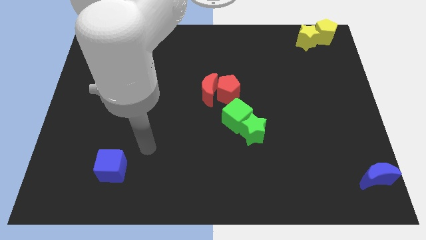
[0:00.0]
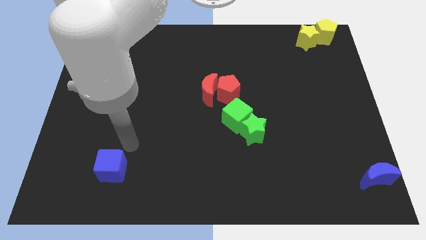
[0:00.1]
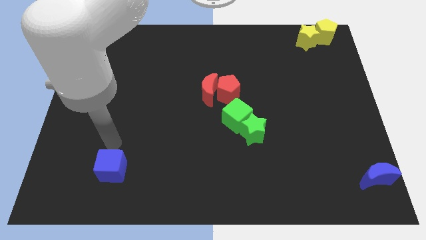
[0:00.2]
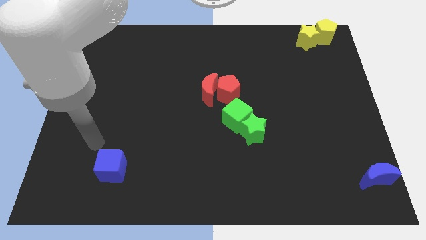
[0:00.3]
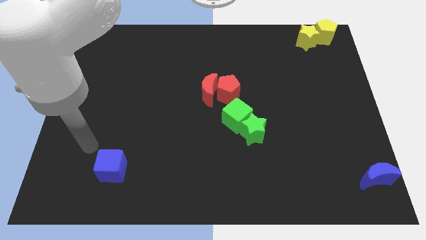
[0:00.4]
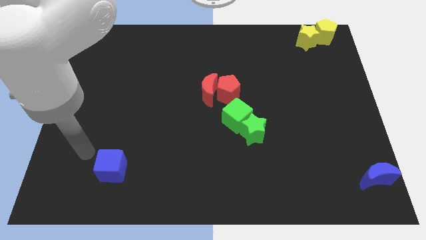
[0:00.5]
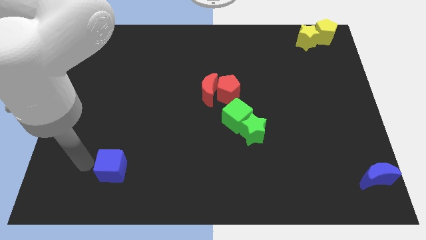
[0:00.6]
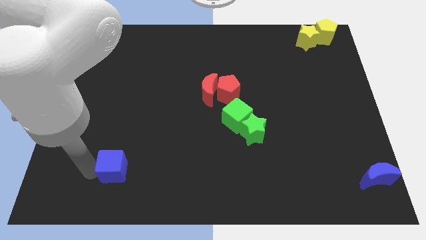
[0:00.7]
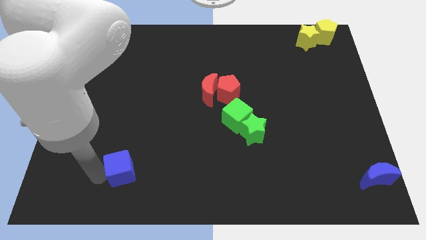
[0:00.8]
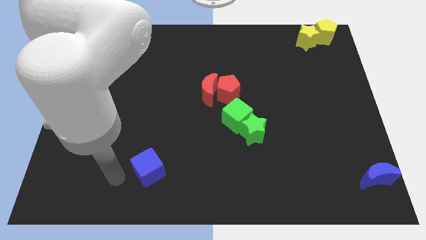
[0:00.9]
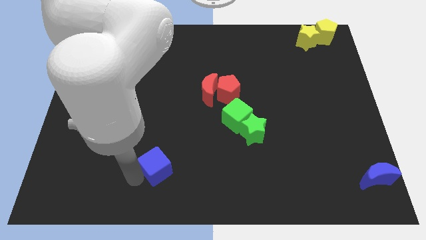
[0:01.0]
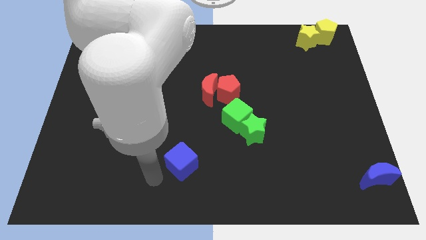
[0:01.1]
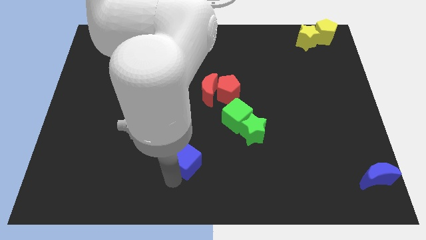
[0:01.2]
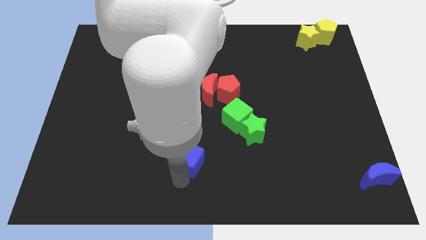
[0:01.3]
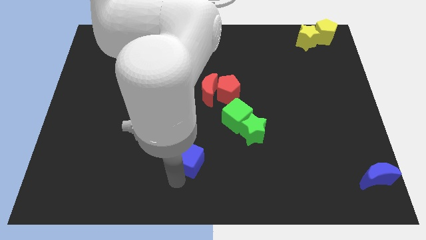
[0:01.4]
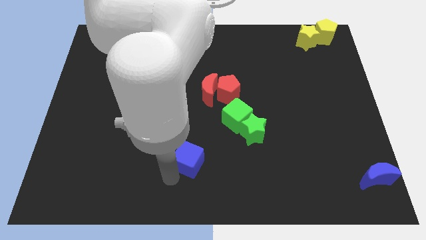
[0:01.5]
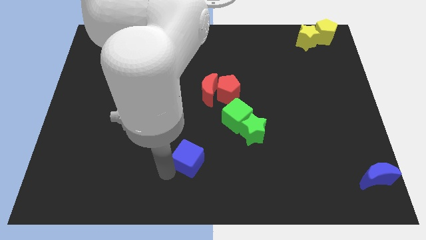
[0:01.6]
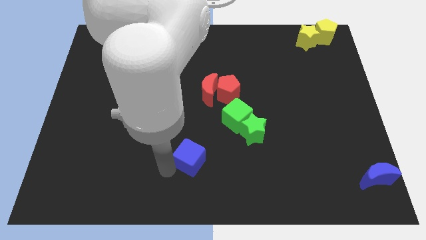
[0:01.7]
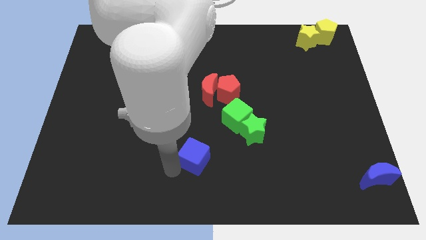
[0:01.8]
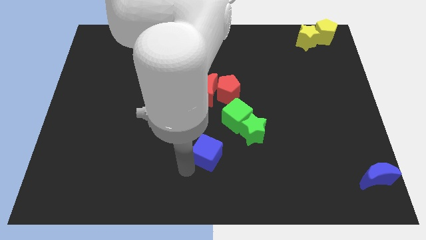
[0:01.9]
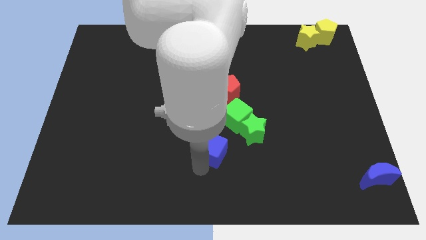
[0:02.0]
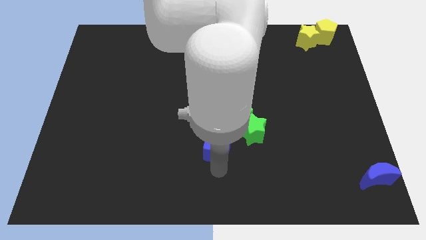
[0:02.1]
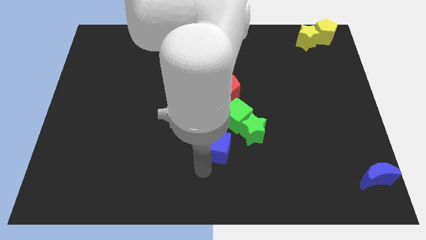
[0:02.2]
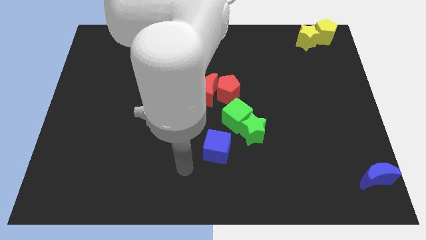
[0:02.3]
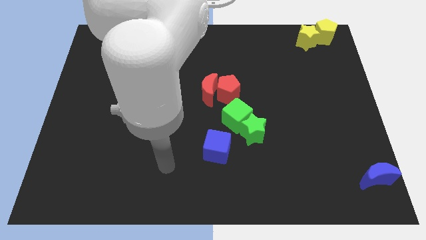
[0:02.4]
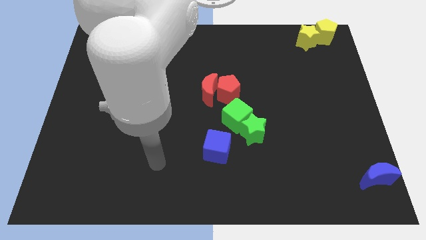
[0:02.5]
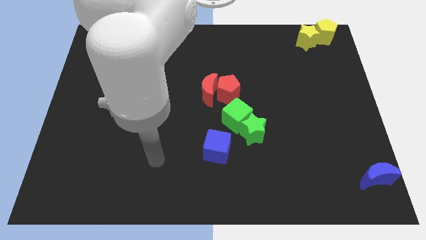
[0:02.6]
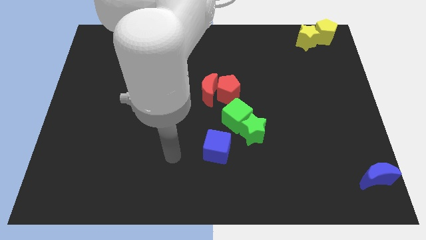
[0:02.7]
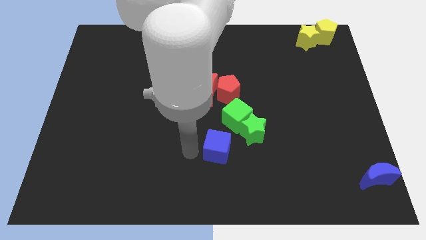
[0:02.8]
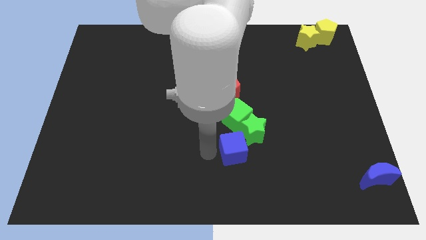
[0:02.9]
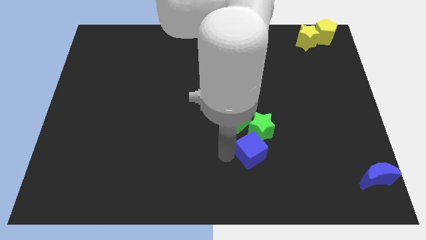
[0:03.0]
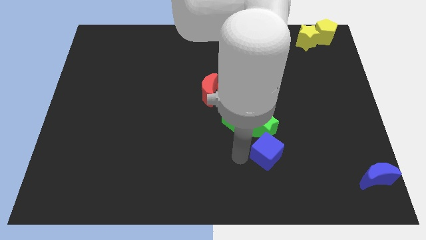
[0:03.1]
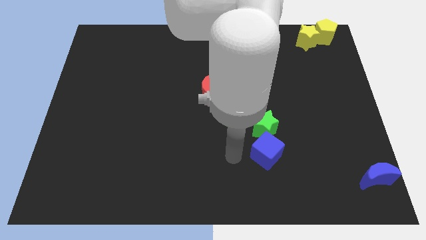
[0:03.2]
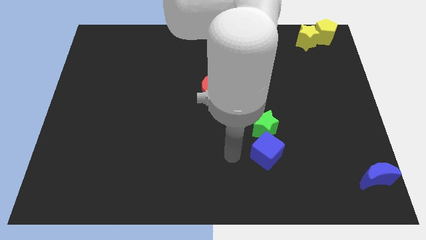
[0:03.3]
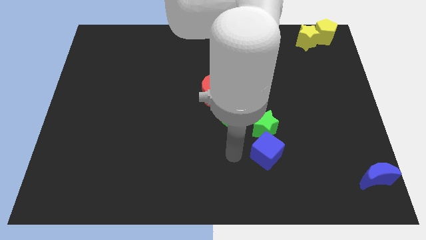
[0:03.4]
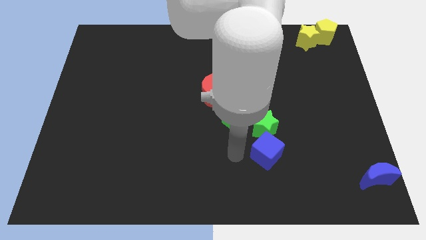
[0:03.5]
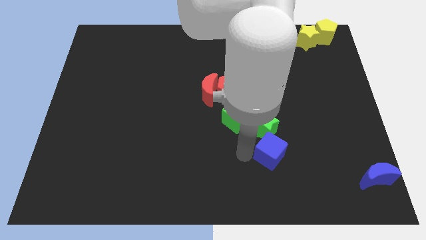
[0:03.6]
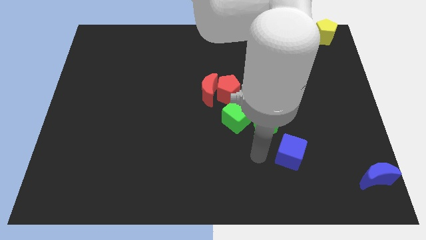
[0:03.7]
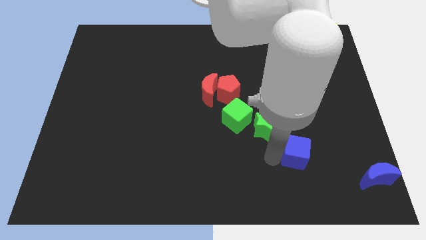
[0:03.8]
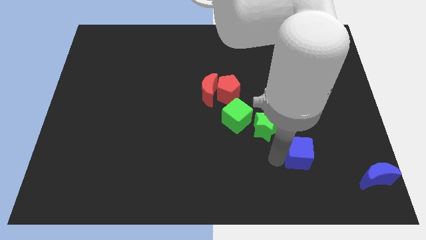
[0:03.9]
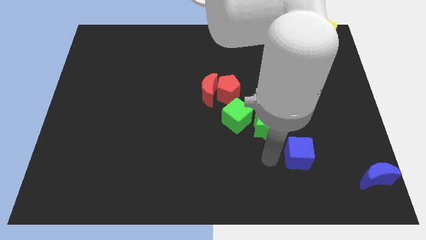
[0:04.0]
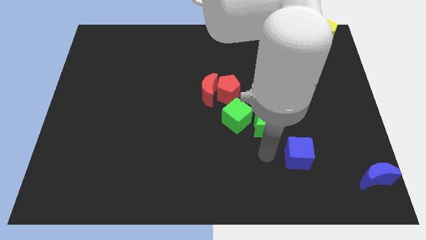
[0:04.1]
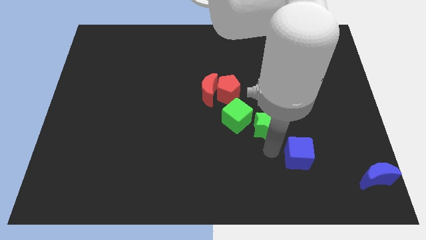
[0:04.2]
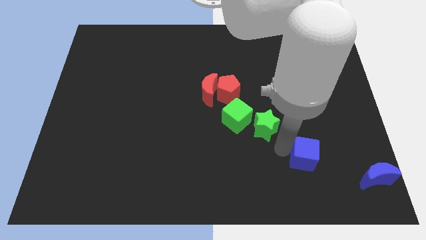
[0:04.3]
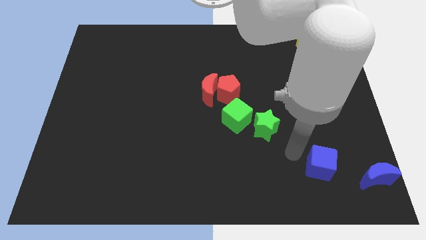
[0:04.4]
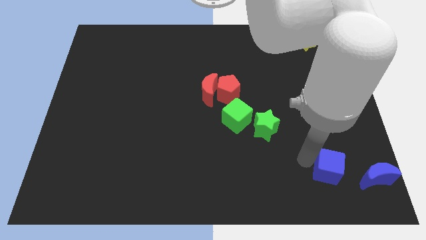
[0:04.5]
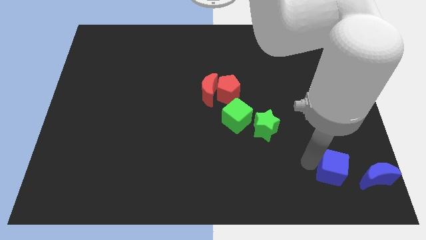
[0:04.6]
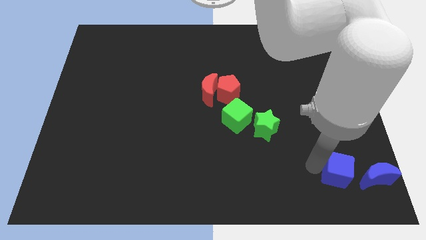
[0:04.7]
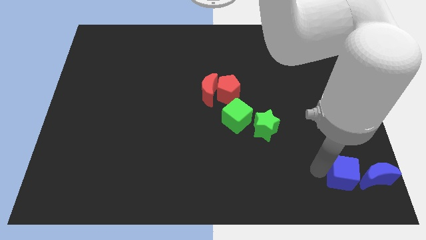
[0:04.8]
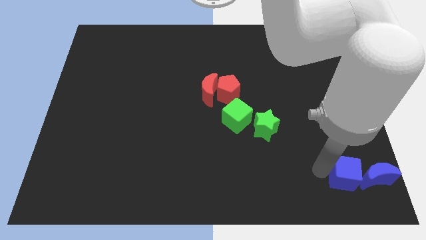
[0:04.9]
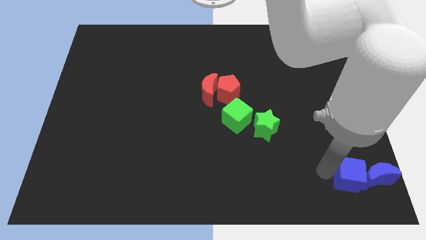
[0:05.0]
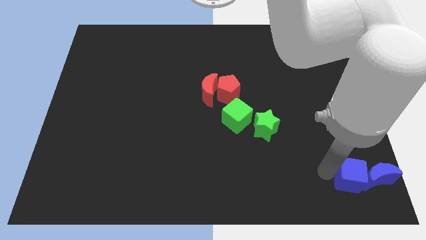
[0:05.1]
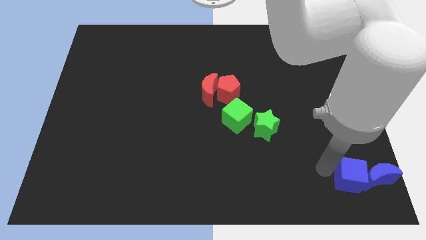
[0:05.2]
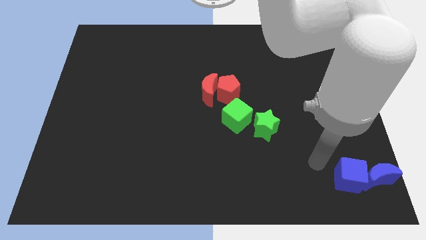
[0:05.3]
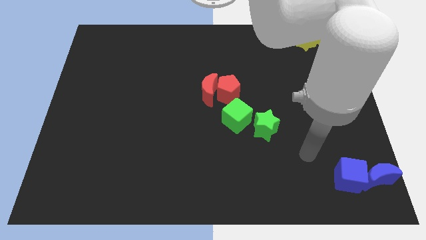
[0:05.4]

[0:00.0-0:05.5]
push the blue cube into the blue crescent

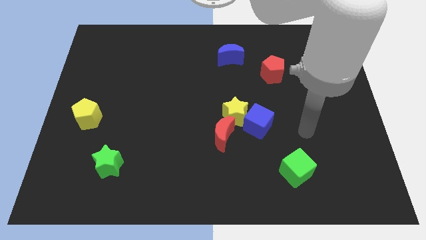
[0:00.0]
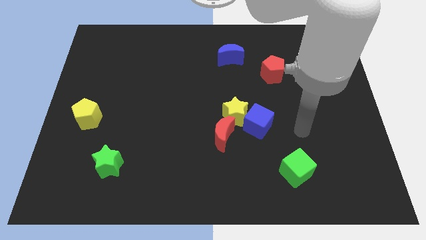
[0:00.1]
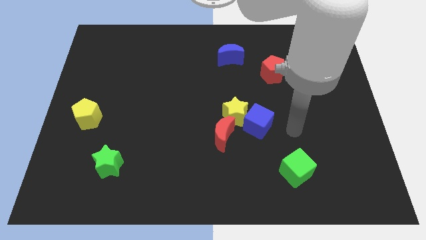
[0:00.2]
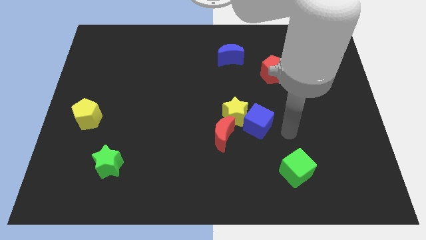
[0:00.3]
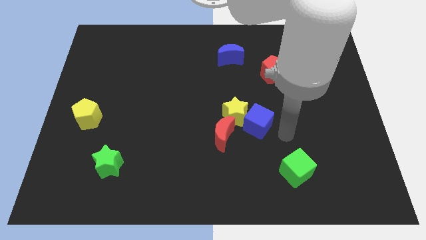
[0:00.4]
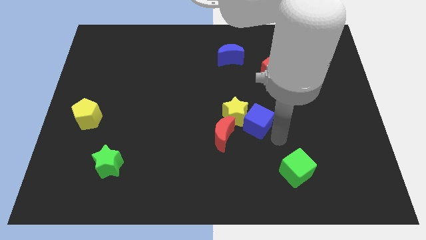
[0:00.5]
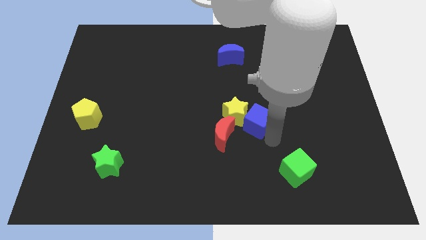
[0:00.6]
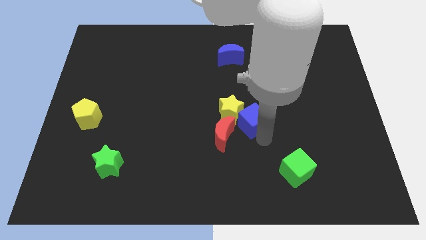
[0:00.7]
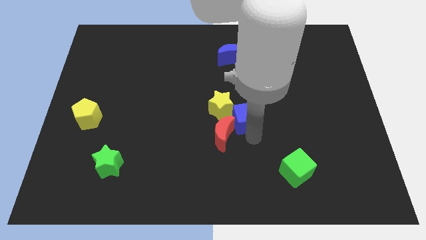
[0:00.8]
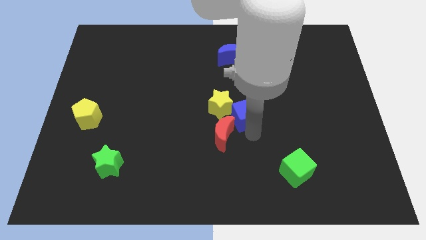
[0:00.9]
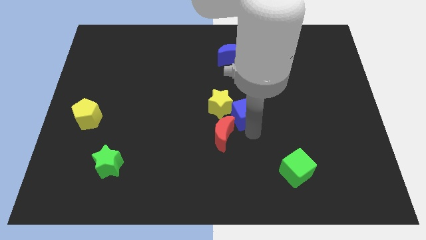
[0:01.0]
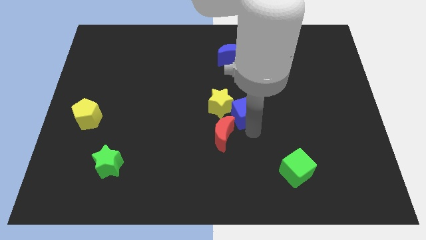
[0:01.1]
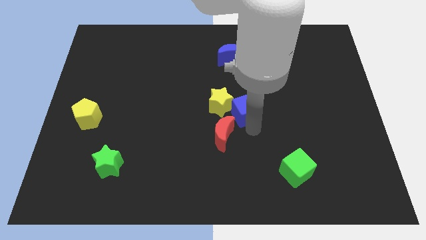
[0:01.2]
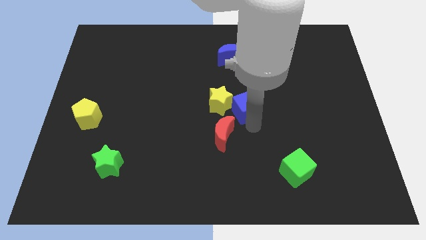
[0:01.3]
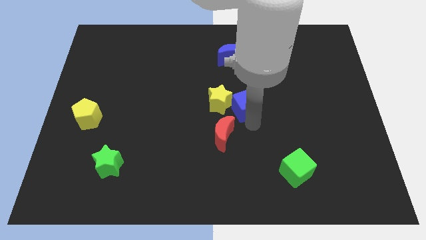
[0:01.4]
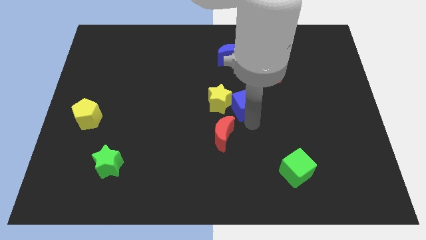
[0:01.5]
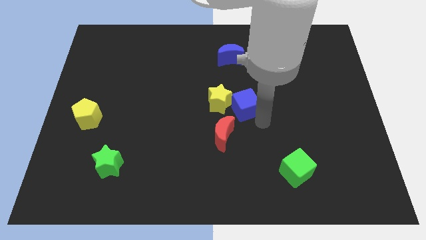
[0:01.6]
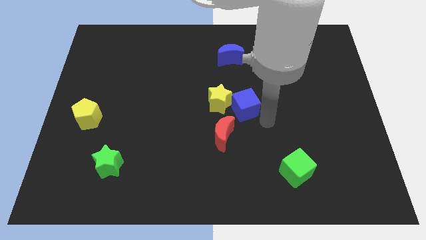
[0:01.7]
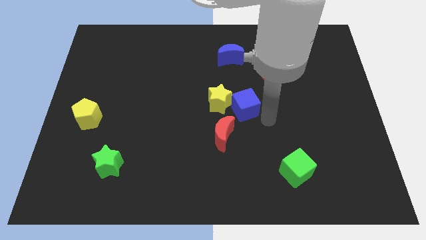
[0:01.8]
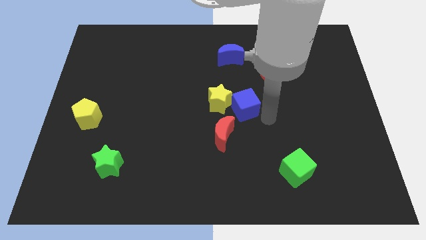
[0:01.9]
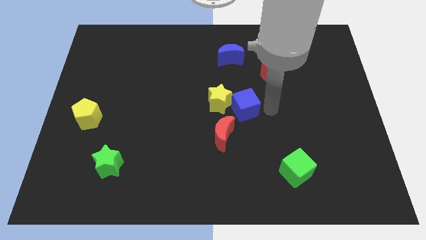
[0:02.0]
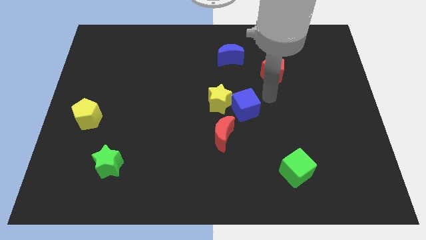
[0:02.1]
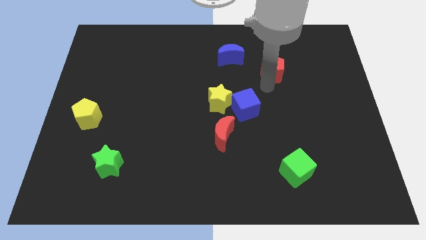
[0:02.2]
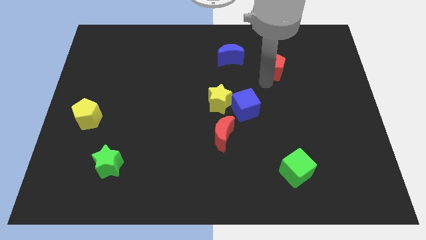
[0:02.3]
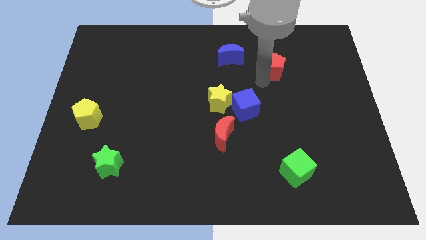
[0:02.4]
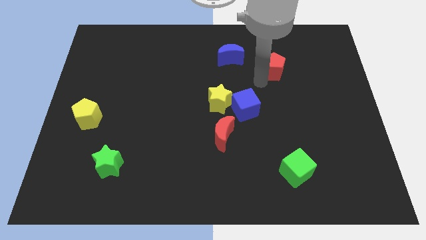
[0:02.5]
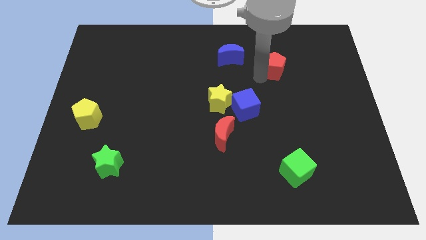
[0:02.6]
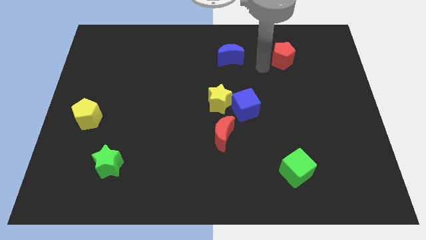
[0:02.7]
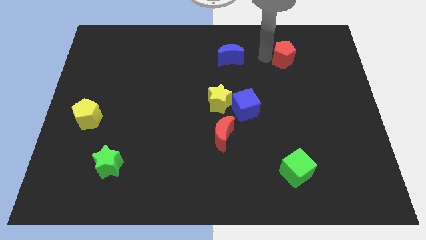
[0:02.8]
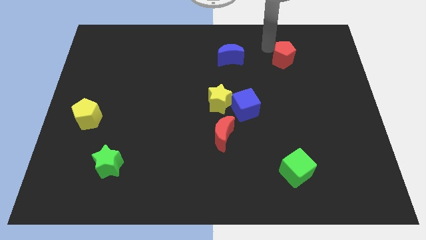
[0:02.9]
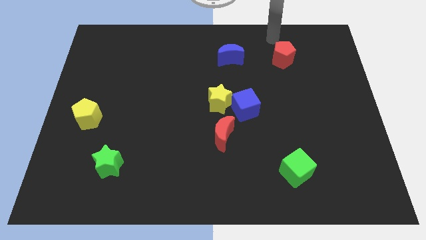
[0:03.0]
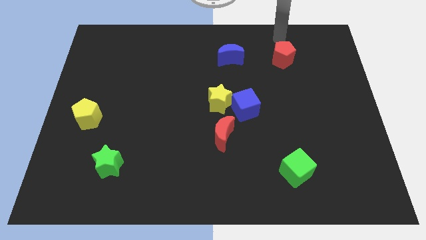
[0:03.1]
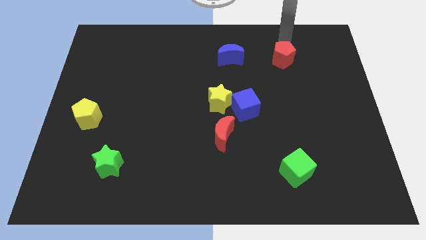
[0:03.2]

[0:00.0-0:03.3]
adjust the blue cube and red pentagon diagonally to the red crescent

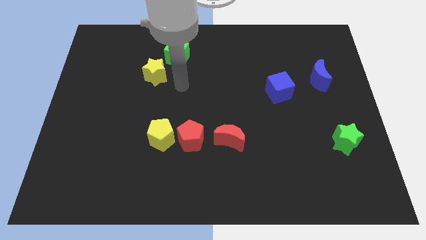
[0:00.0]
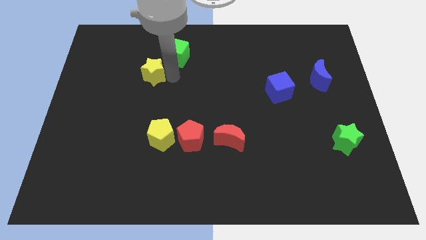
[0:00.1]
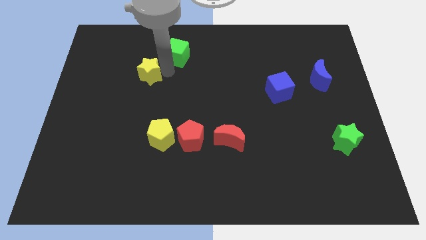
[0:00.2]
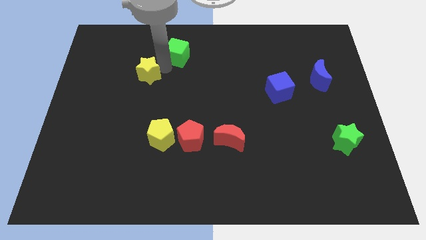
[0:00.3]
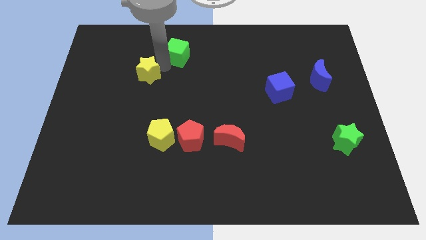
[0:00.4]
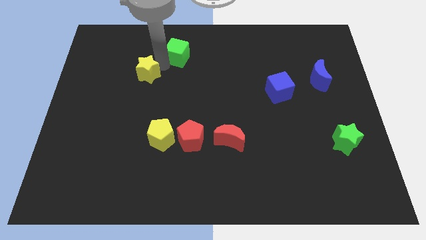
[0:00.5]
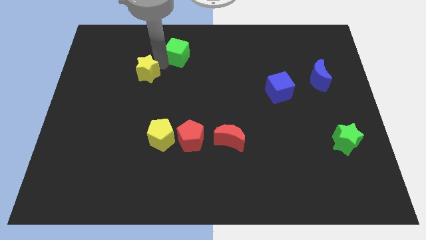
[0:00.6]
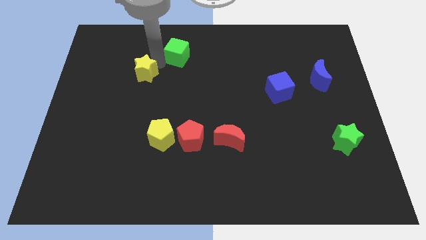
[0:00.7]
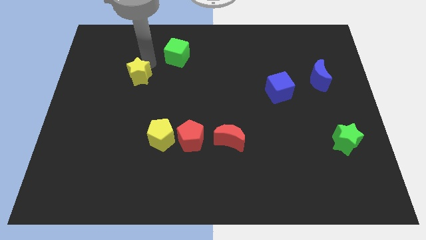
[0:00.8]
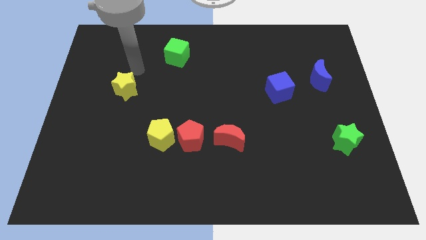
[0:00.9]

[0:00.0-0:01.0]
push the yellow star slightly to the left center of the board
